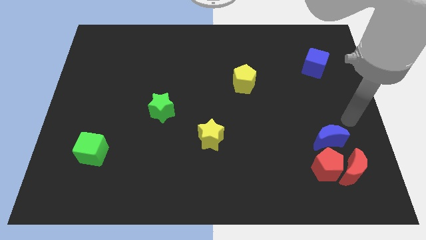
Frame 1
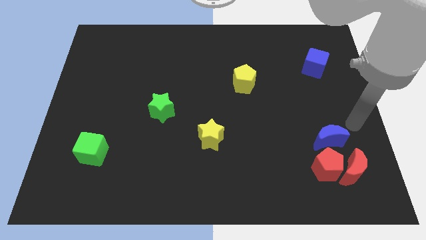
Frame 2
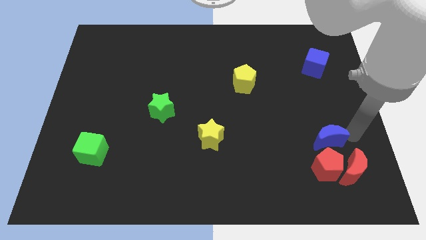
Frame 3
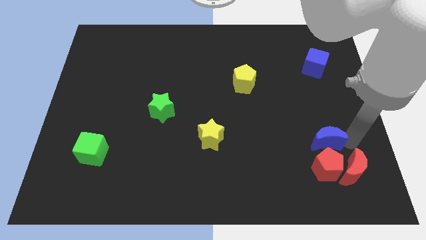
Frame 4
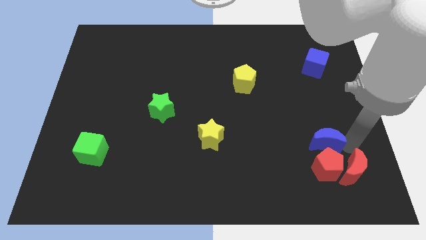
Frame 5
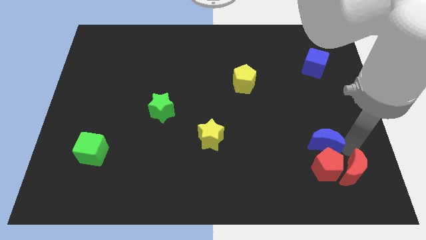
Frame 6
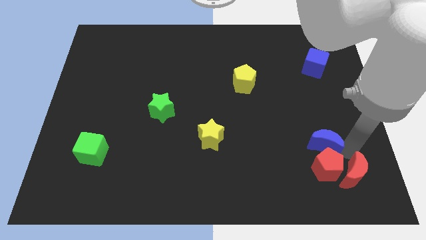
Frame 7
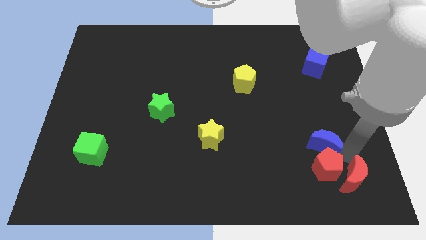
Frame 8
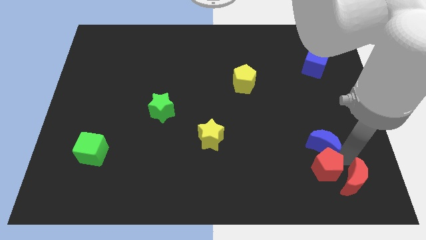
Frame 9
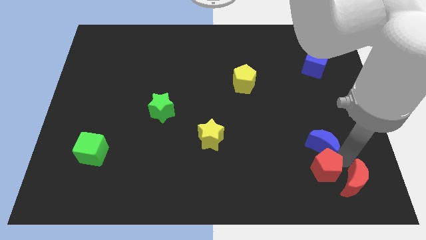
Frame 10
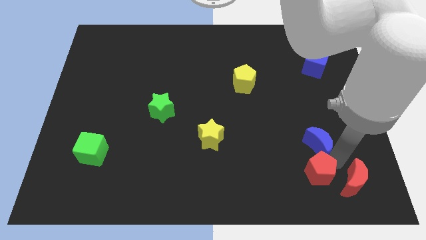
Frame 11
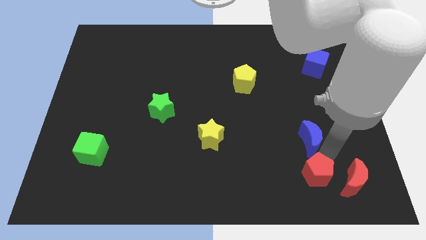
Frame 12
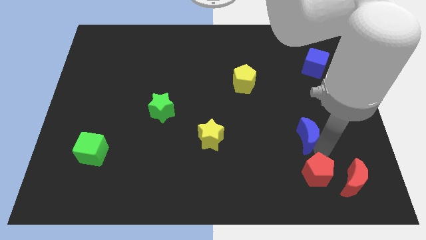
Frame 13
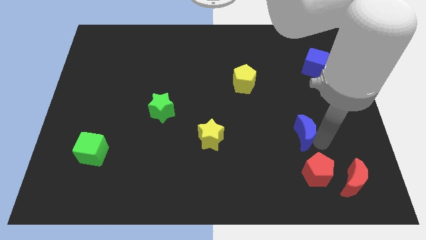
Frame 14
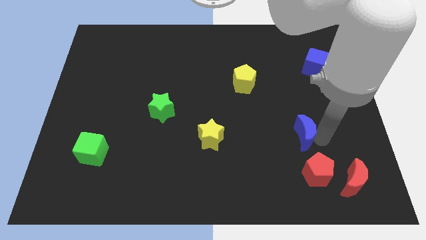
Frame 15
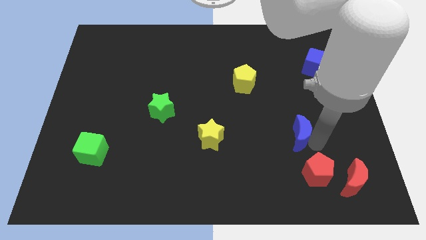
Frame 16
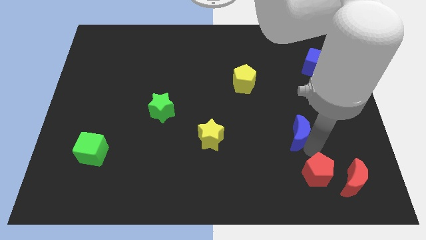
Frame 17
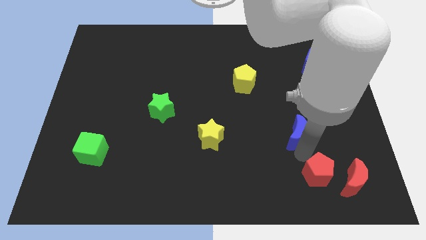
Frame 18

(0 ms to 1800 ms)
place your arm in between the blue semi circle and red pentagon

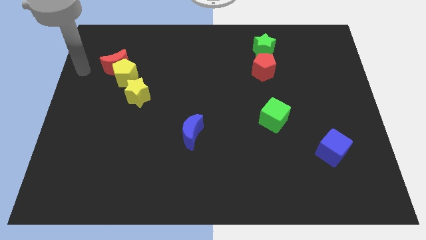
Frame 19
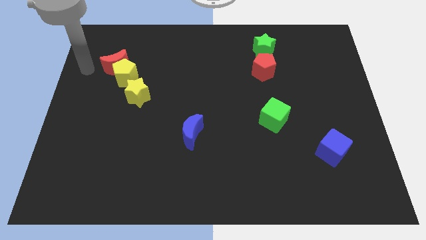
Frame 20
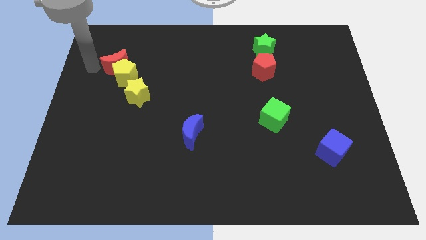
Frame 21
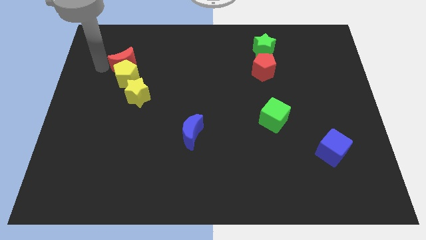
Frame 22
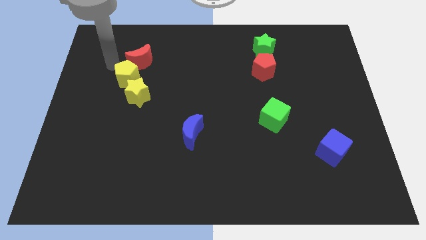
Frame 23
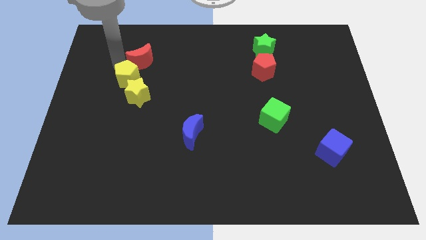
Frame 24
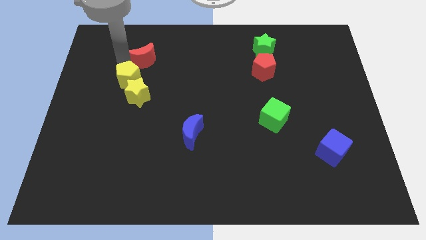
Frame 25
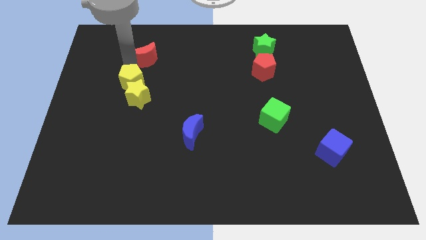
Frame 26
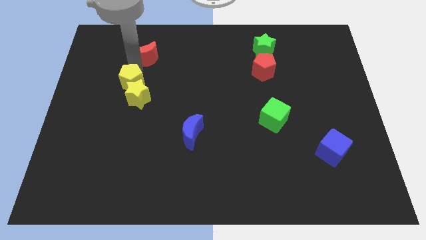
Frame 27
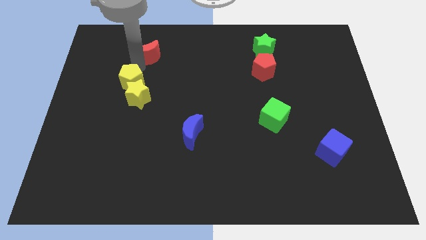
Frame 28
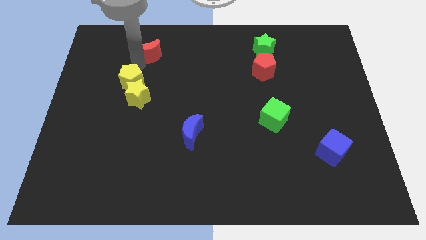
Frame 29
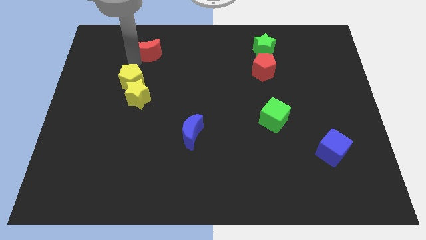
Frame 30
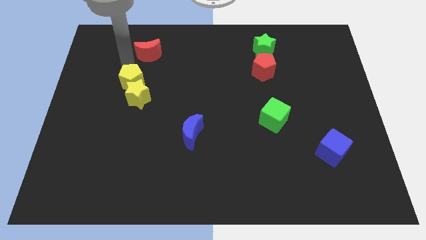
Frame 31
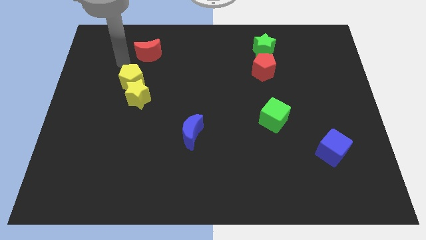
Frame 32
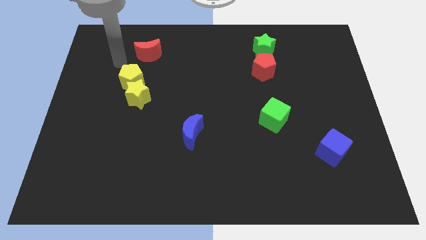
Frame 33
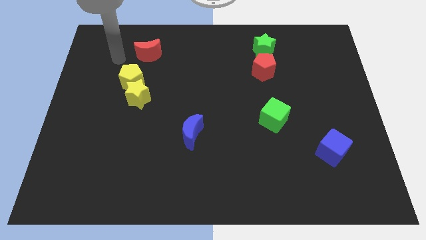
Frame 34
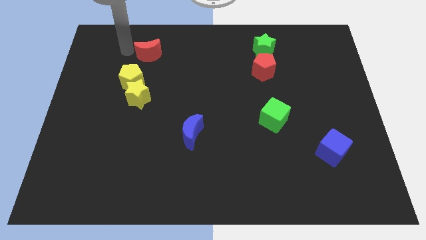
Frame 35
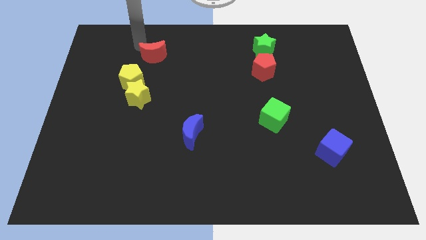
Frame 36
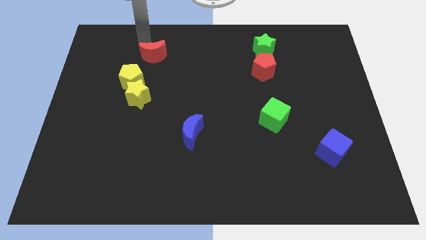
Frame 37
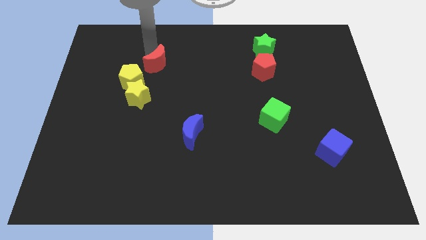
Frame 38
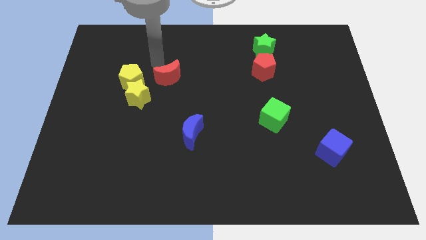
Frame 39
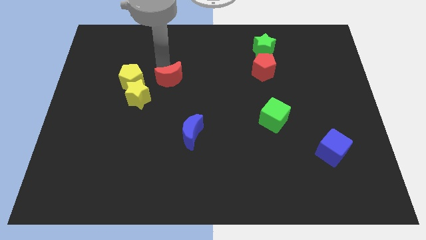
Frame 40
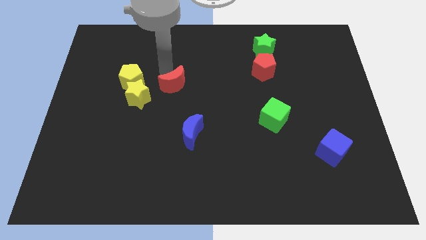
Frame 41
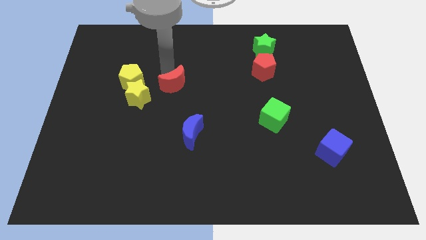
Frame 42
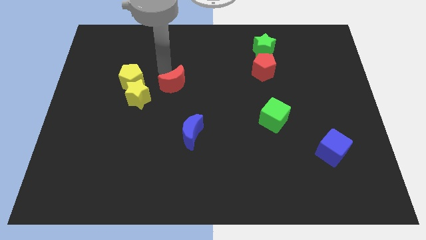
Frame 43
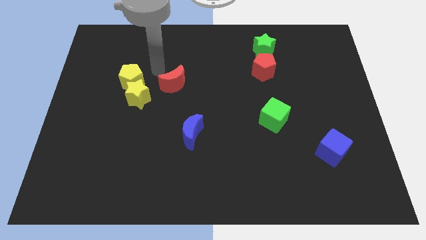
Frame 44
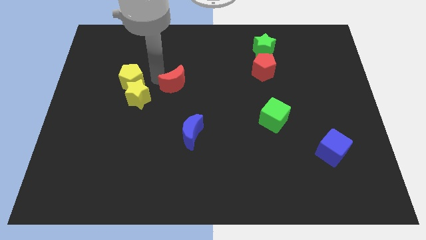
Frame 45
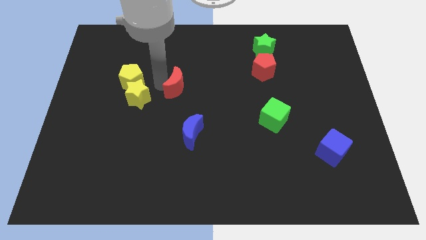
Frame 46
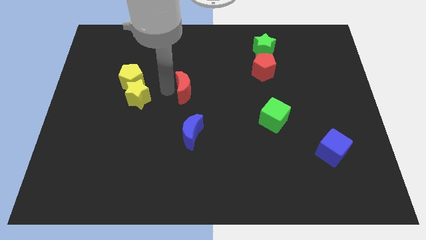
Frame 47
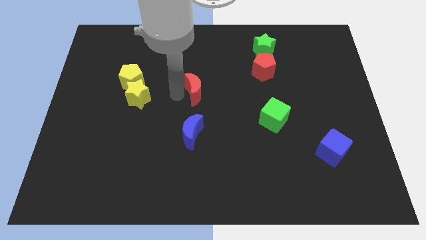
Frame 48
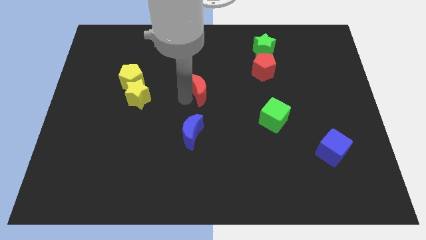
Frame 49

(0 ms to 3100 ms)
move the red moon abov the blue moon at the center

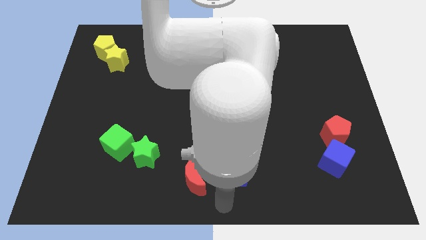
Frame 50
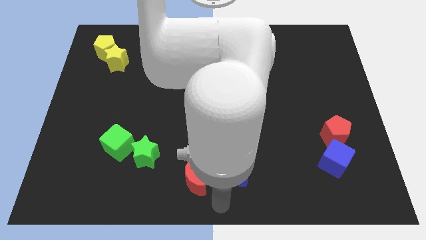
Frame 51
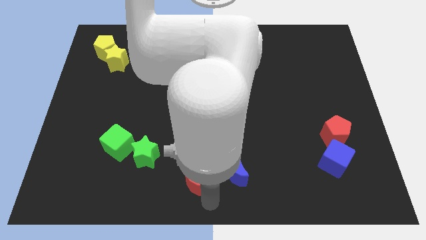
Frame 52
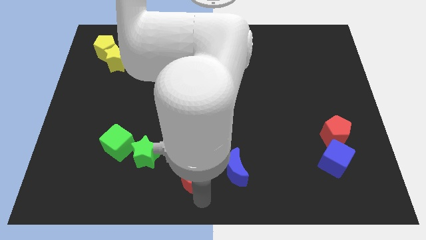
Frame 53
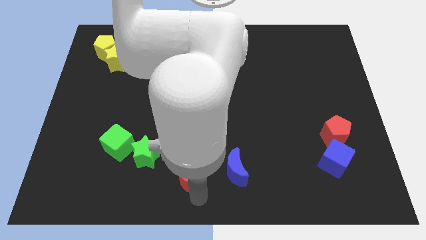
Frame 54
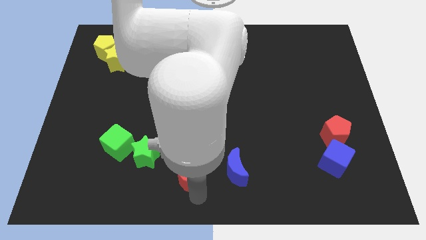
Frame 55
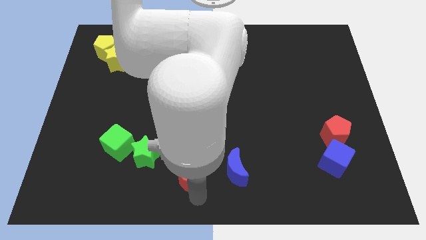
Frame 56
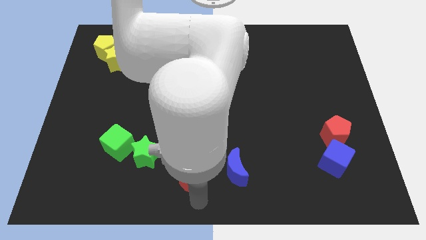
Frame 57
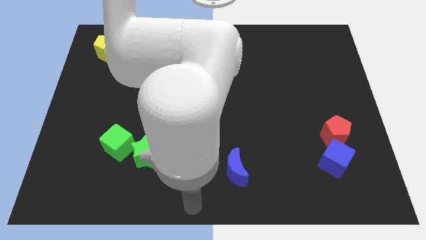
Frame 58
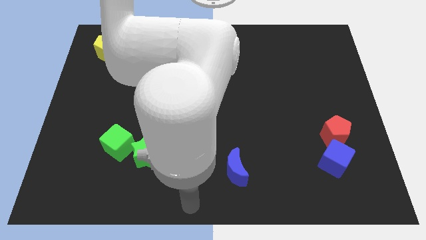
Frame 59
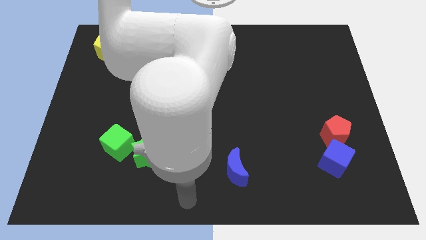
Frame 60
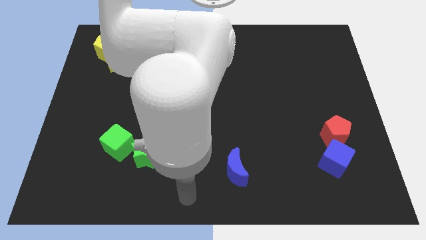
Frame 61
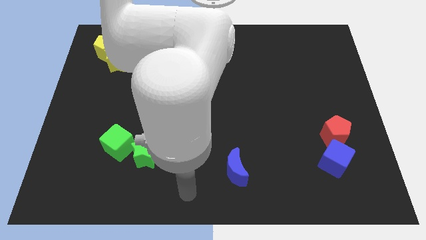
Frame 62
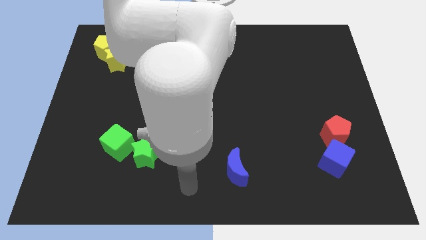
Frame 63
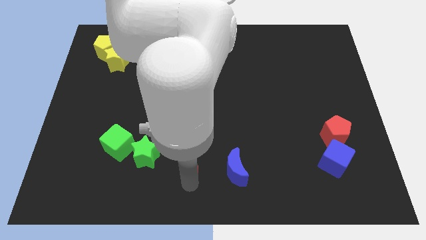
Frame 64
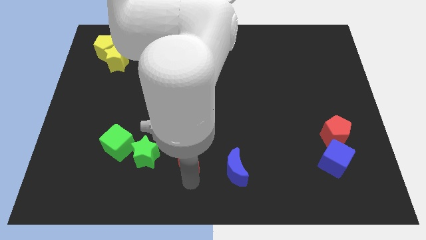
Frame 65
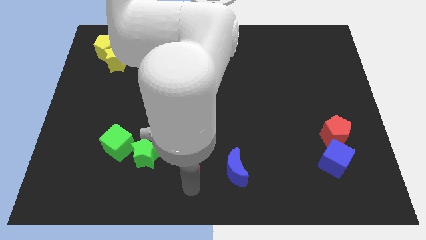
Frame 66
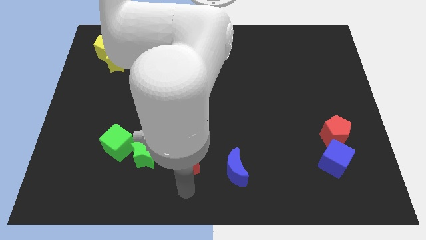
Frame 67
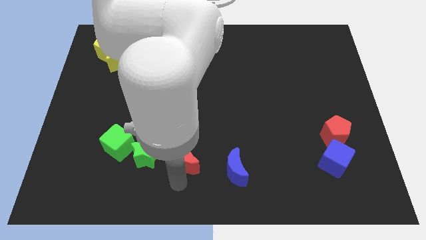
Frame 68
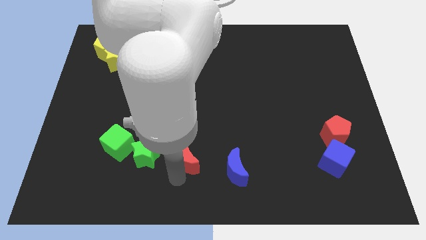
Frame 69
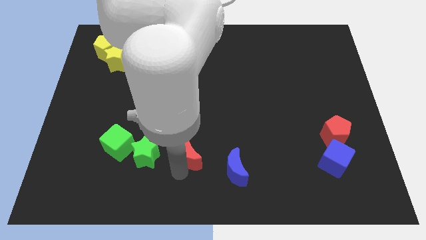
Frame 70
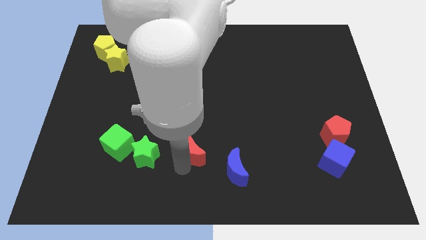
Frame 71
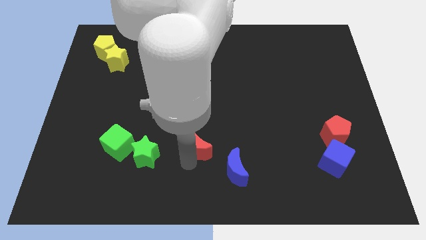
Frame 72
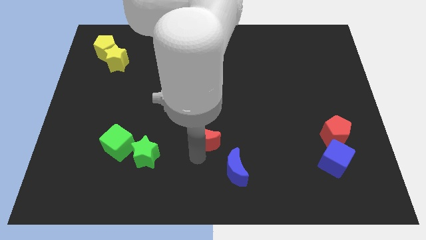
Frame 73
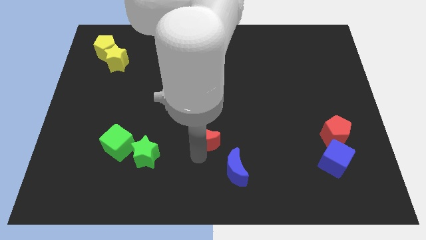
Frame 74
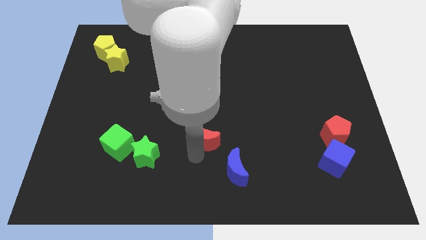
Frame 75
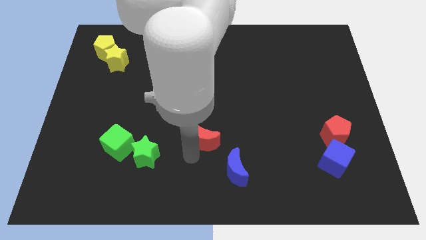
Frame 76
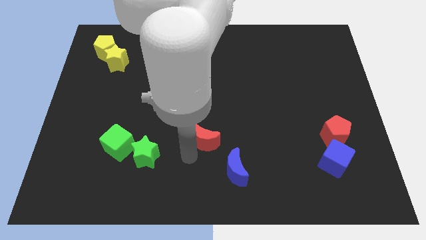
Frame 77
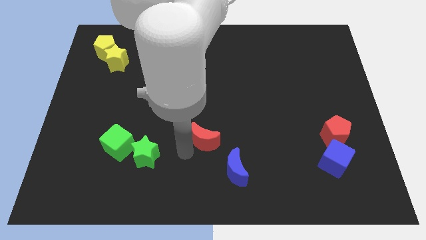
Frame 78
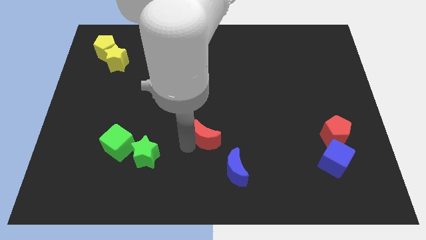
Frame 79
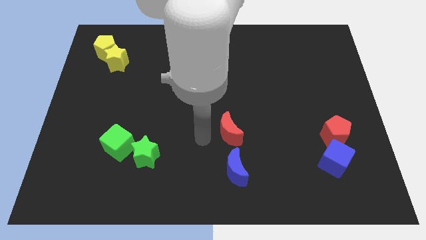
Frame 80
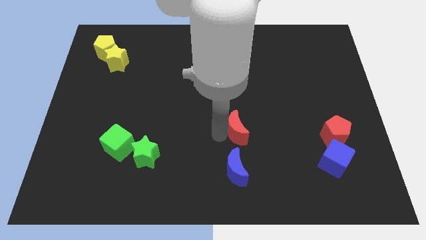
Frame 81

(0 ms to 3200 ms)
move the red crescent to the top of the blue crescent

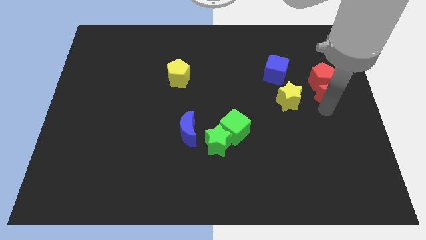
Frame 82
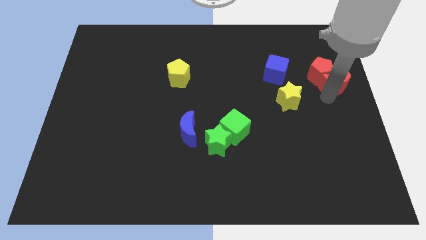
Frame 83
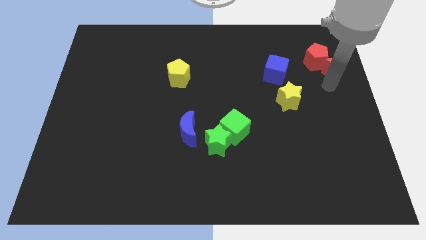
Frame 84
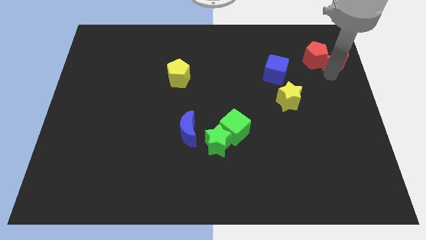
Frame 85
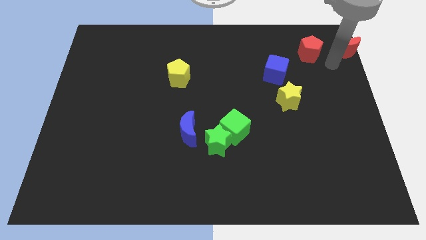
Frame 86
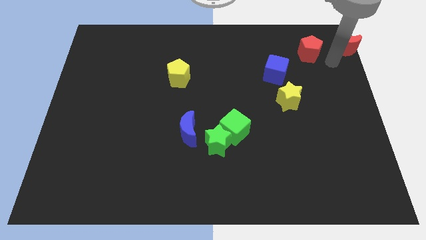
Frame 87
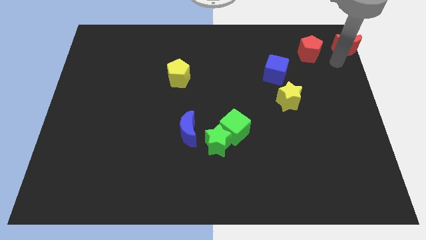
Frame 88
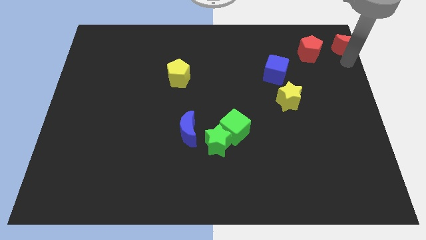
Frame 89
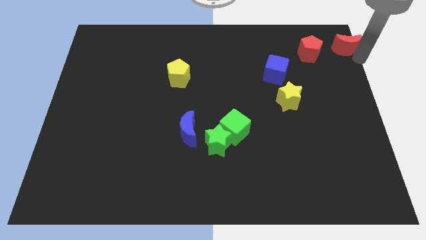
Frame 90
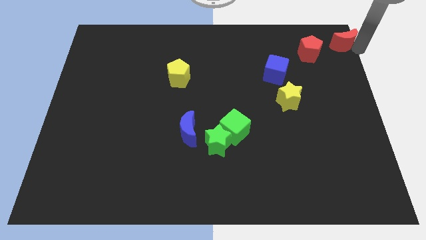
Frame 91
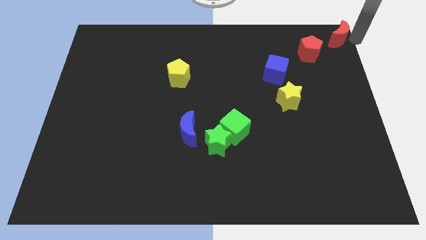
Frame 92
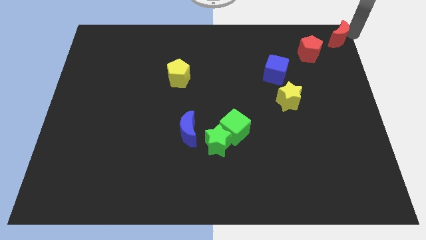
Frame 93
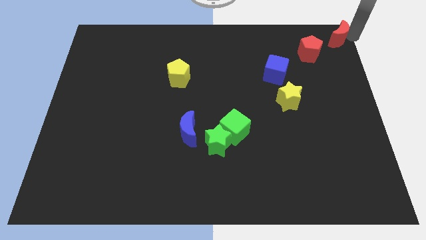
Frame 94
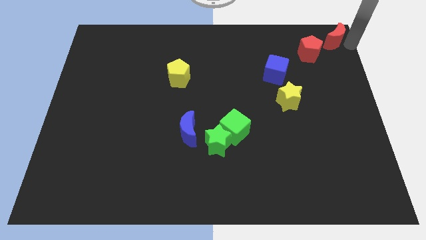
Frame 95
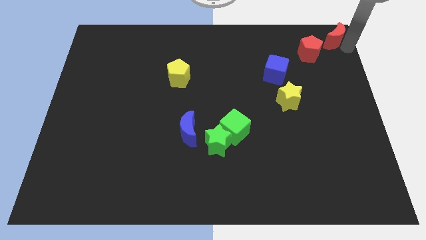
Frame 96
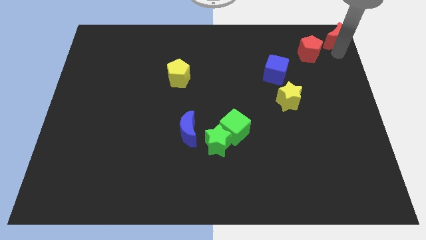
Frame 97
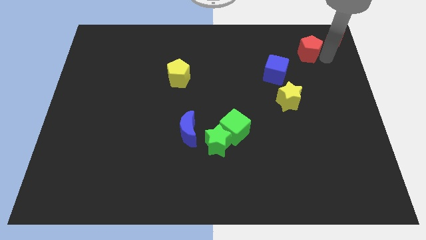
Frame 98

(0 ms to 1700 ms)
move the red pentagon and red crescent to the top right side of the blue cube
